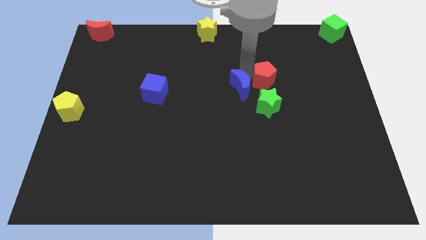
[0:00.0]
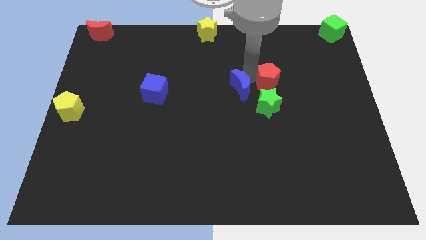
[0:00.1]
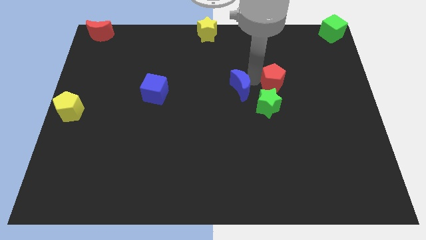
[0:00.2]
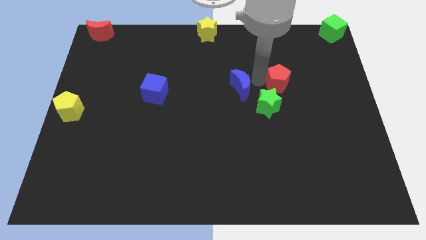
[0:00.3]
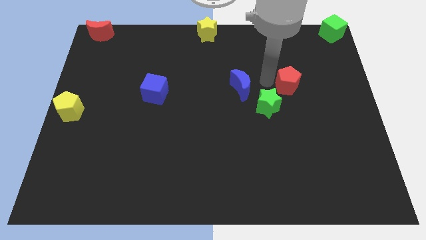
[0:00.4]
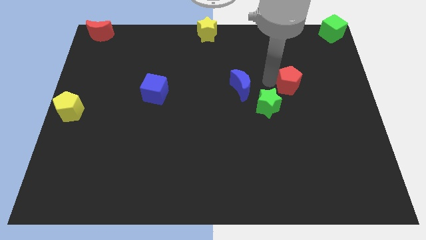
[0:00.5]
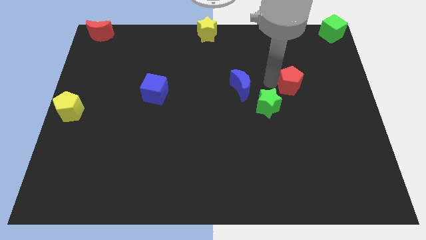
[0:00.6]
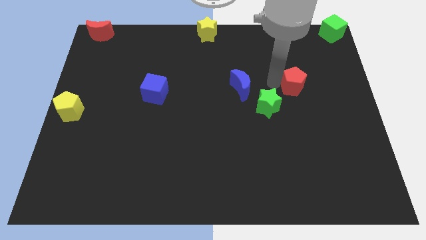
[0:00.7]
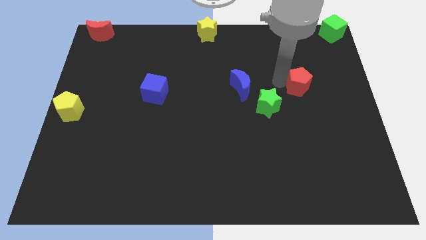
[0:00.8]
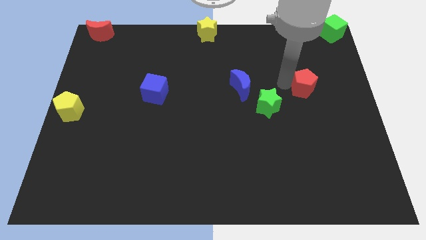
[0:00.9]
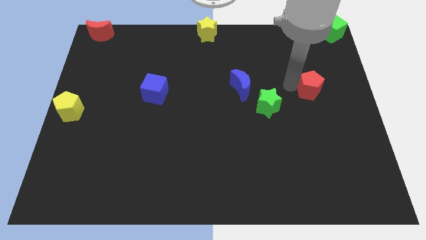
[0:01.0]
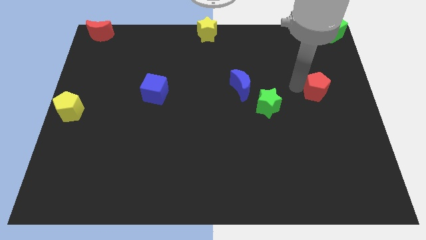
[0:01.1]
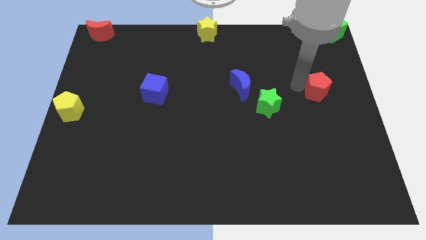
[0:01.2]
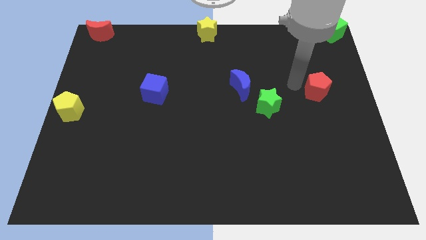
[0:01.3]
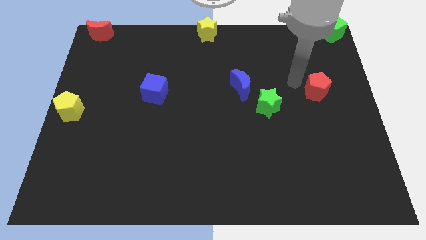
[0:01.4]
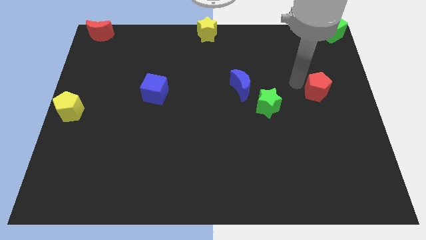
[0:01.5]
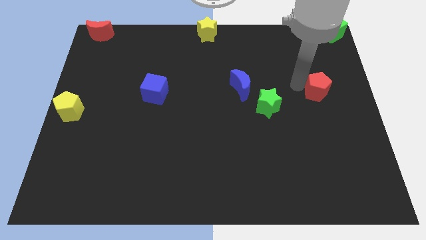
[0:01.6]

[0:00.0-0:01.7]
push the red pentagon to the right of the board

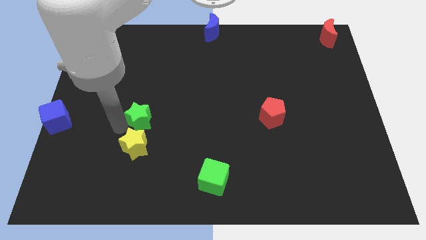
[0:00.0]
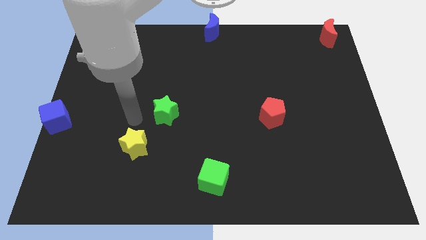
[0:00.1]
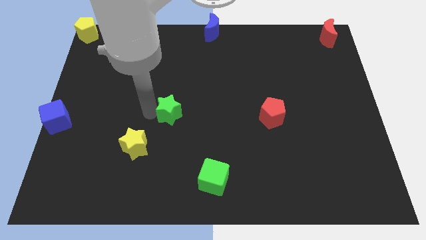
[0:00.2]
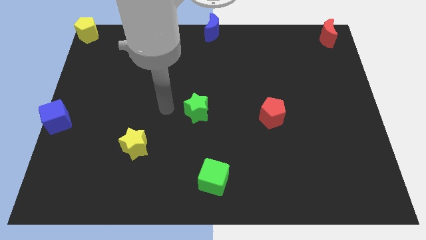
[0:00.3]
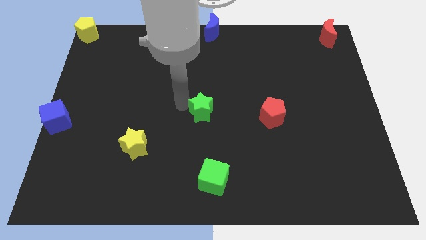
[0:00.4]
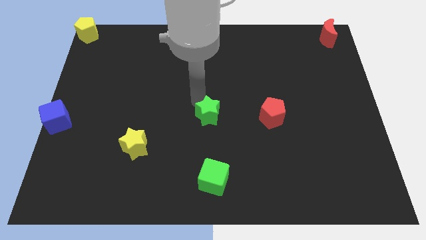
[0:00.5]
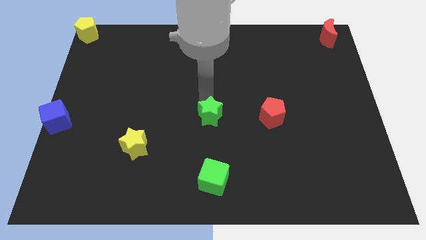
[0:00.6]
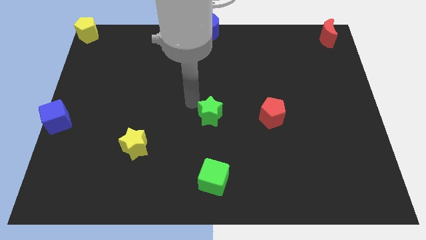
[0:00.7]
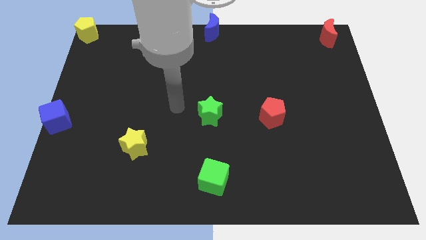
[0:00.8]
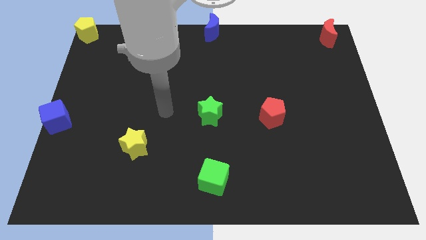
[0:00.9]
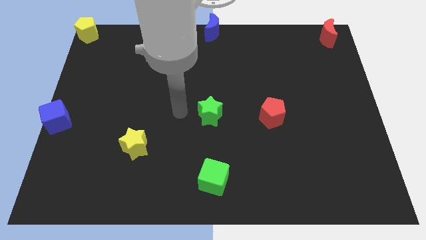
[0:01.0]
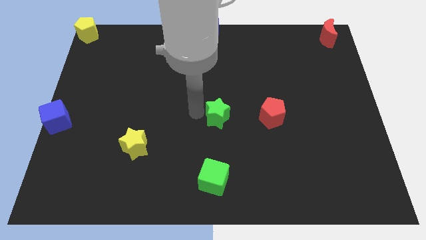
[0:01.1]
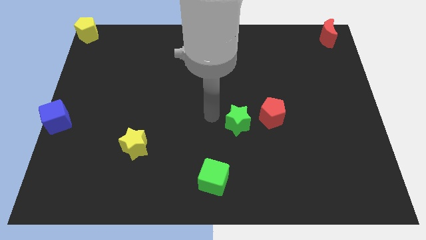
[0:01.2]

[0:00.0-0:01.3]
push green star above green cube

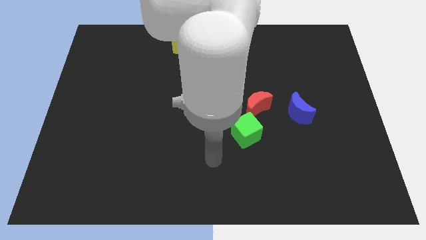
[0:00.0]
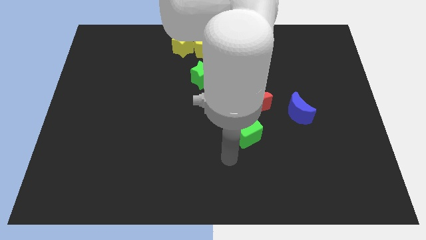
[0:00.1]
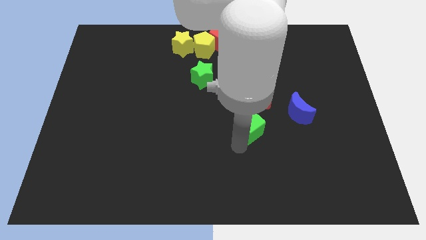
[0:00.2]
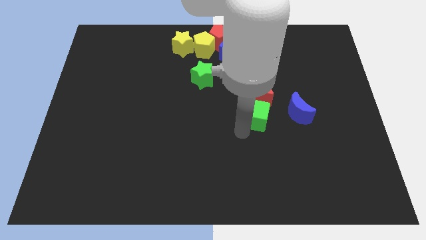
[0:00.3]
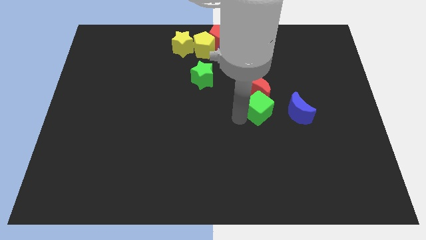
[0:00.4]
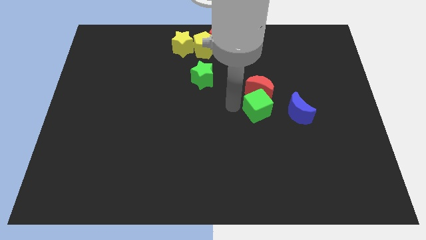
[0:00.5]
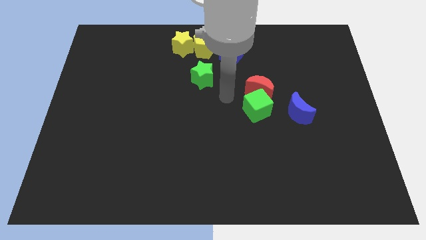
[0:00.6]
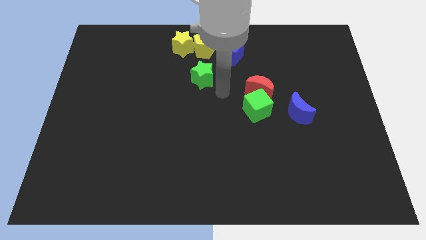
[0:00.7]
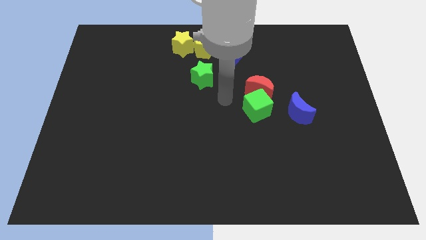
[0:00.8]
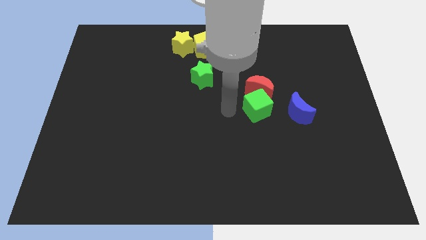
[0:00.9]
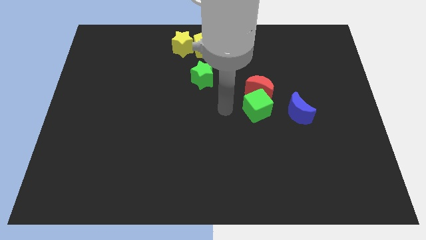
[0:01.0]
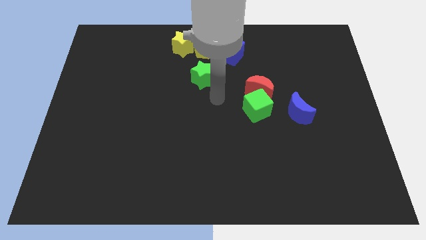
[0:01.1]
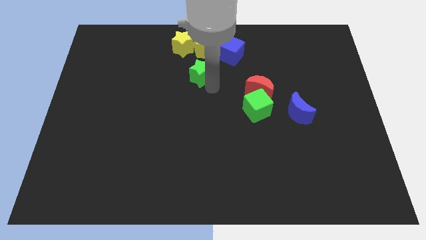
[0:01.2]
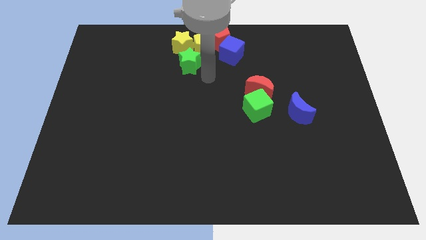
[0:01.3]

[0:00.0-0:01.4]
put the green cube into the red moon

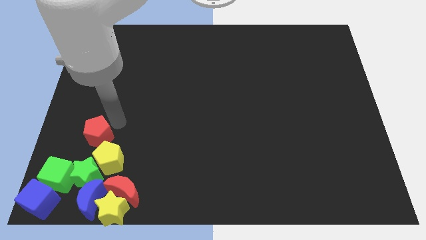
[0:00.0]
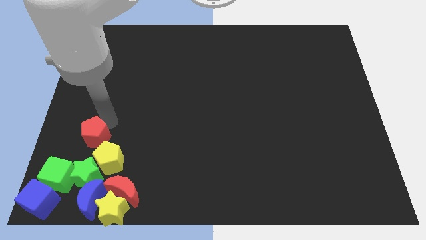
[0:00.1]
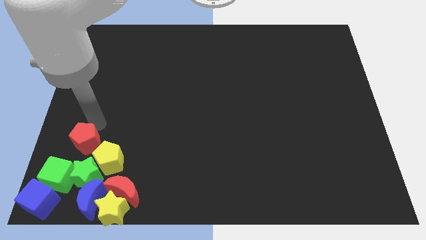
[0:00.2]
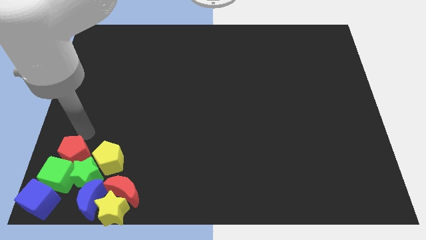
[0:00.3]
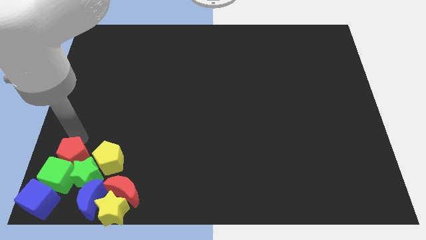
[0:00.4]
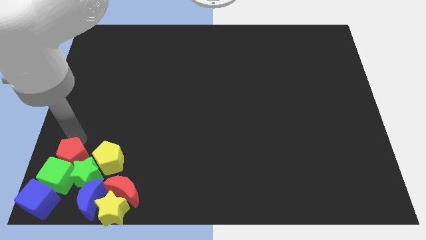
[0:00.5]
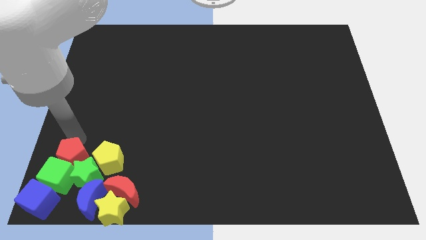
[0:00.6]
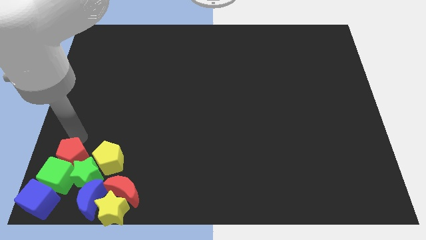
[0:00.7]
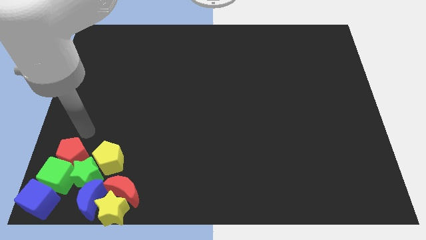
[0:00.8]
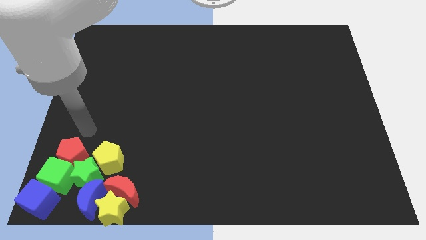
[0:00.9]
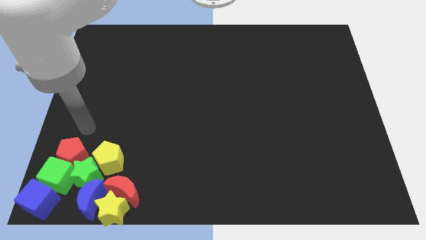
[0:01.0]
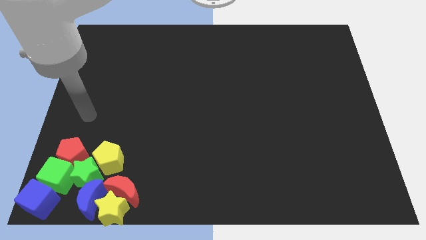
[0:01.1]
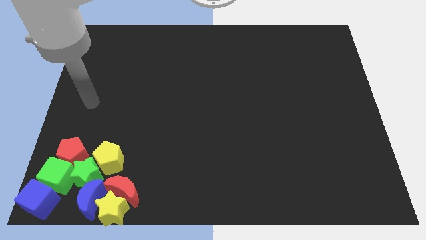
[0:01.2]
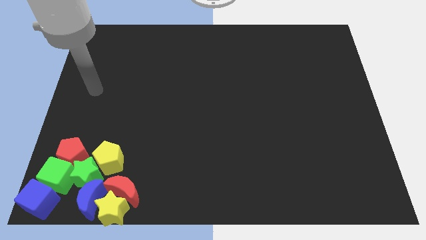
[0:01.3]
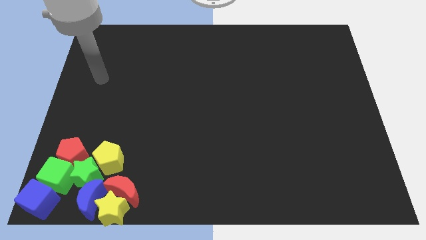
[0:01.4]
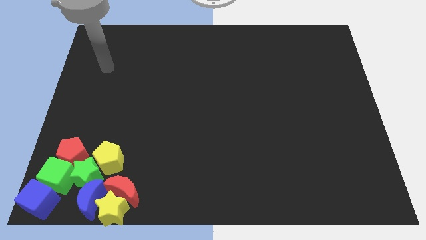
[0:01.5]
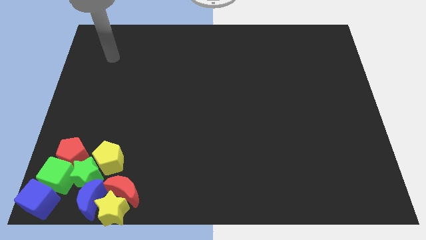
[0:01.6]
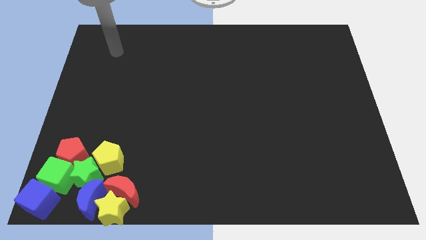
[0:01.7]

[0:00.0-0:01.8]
placed all blocks to the bottom left corner of the board

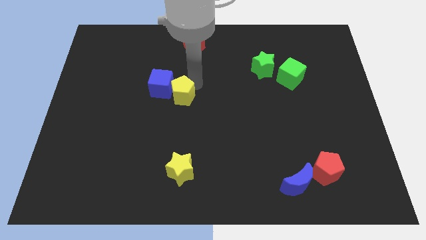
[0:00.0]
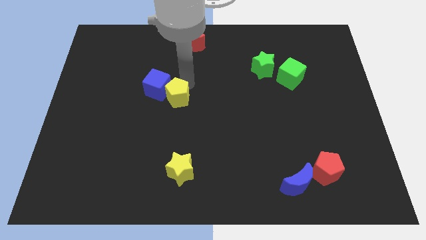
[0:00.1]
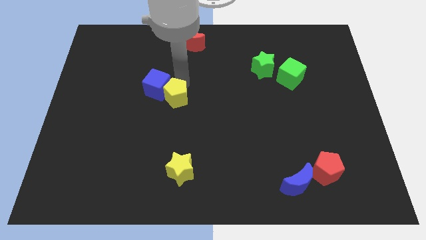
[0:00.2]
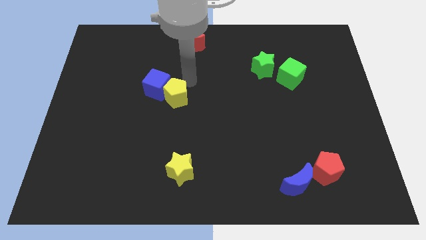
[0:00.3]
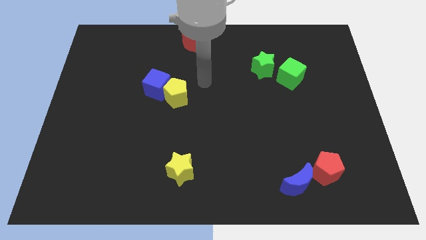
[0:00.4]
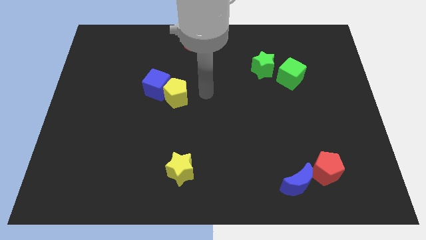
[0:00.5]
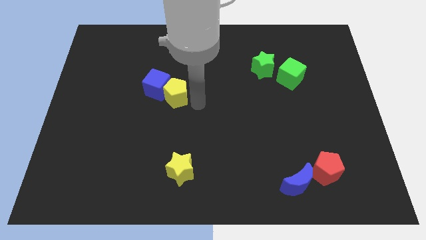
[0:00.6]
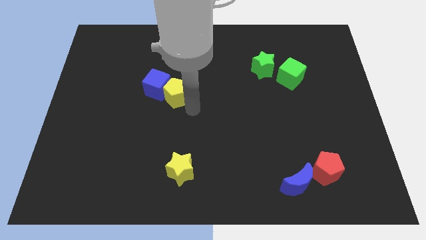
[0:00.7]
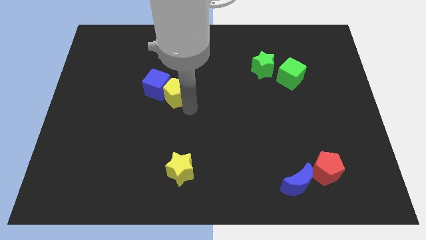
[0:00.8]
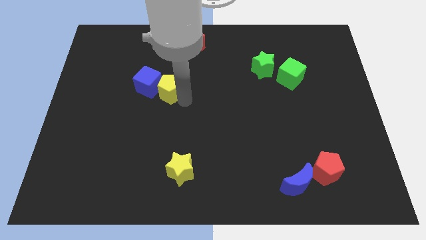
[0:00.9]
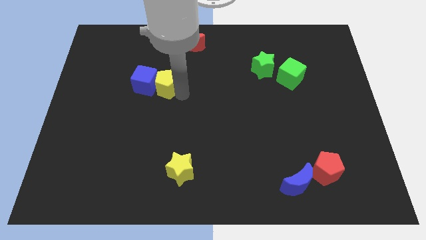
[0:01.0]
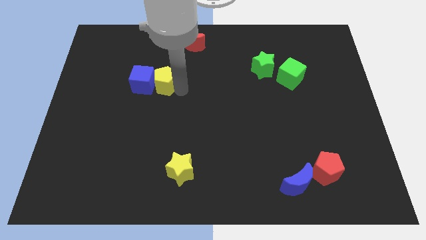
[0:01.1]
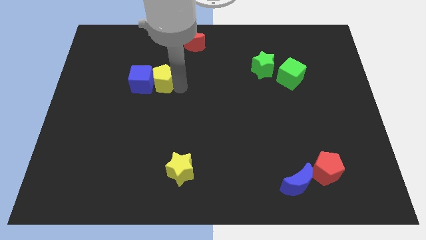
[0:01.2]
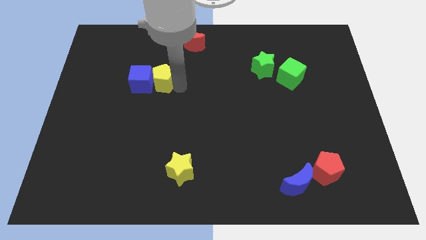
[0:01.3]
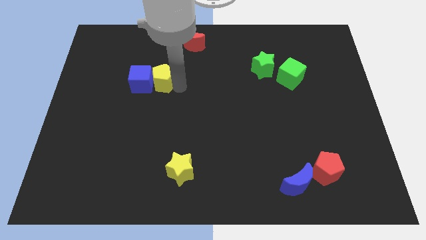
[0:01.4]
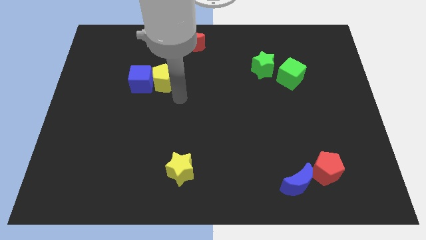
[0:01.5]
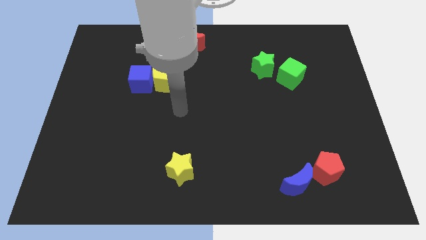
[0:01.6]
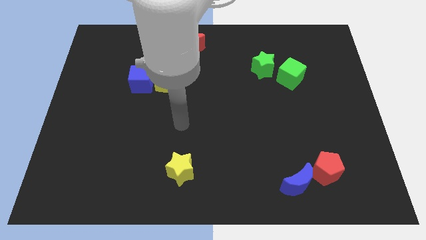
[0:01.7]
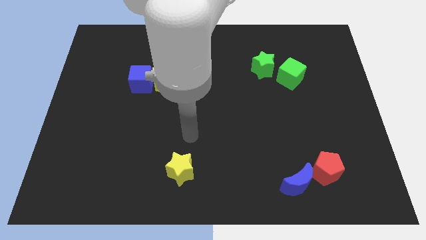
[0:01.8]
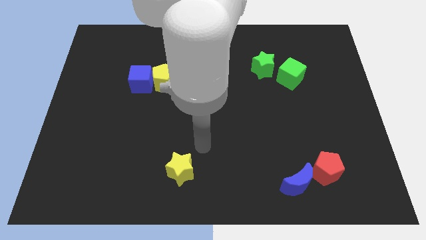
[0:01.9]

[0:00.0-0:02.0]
move the arm towards the yellow star

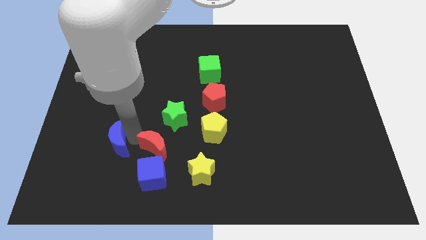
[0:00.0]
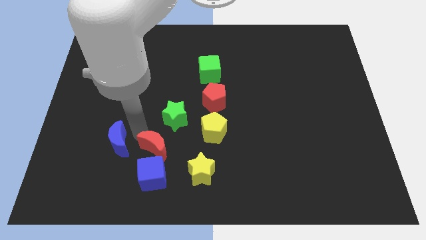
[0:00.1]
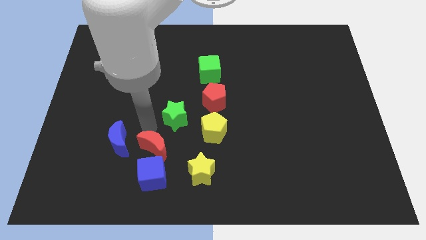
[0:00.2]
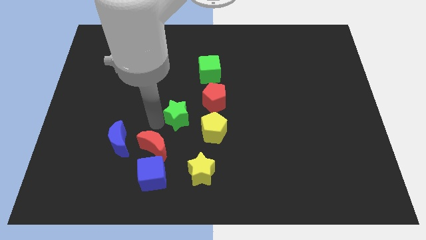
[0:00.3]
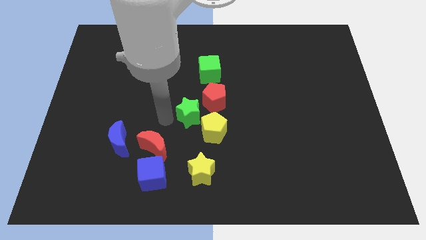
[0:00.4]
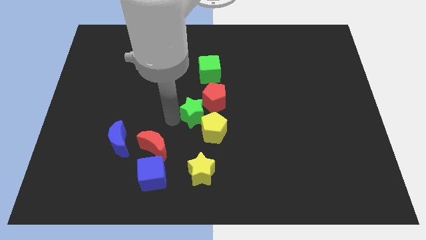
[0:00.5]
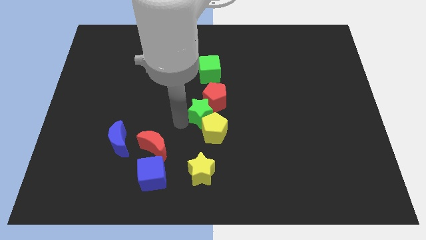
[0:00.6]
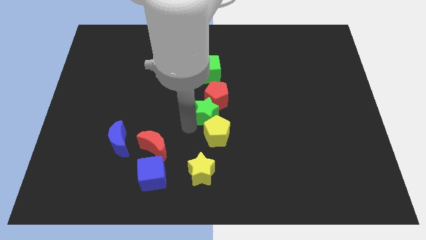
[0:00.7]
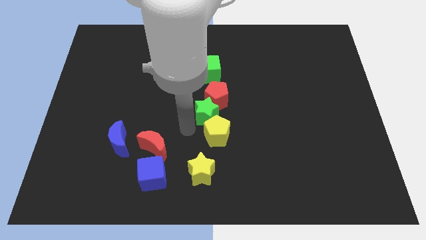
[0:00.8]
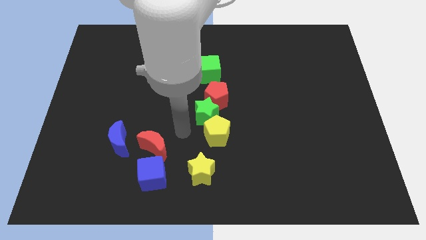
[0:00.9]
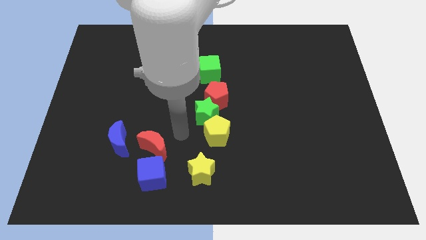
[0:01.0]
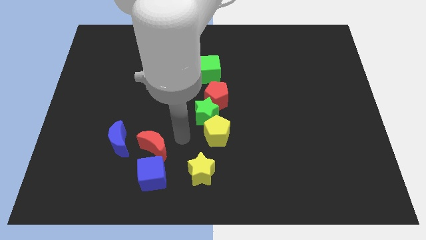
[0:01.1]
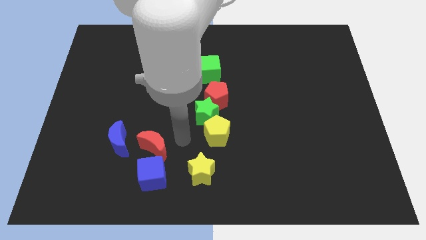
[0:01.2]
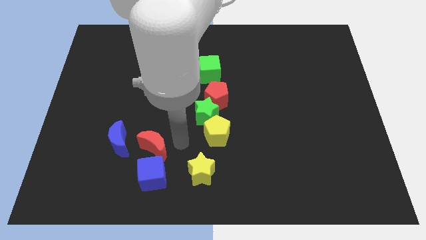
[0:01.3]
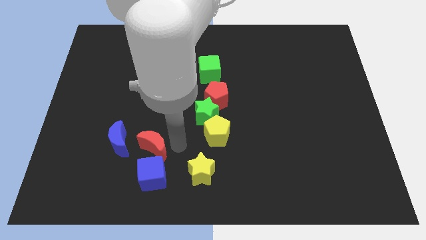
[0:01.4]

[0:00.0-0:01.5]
push the green star to the bottom left of the red pentagon
